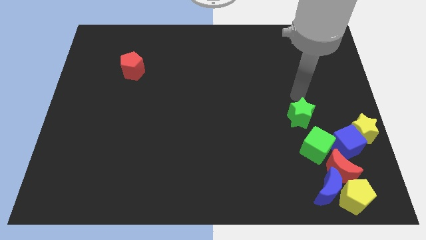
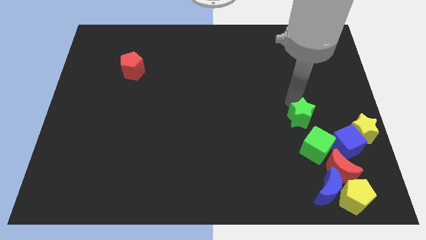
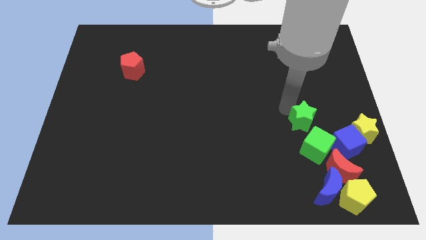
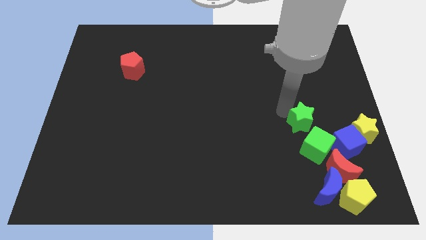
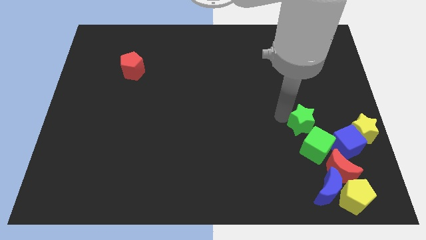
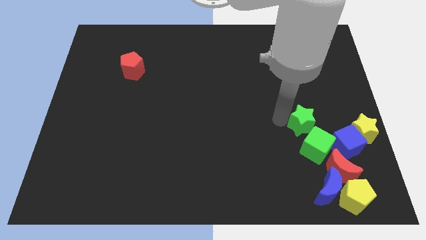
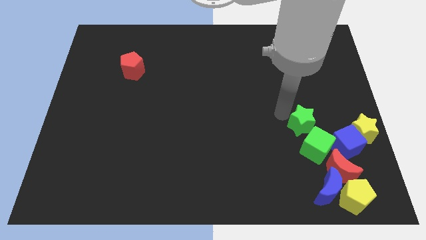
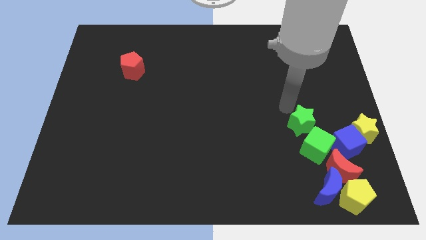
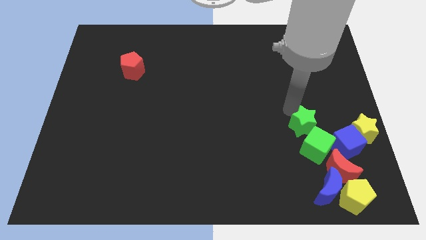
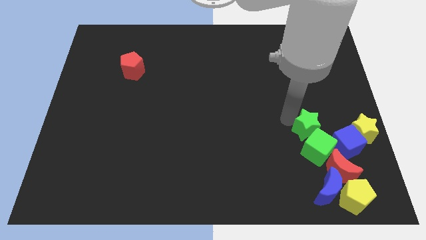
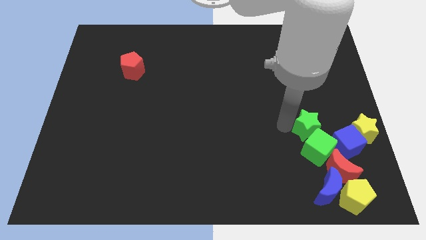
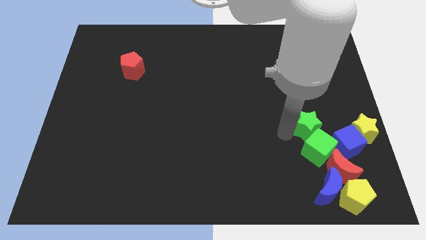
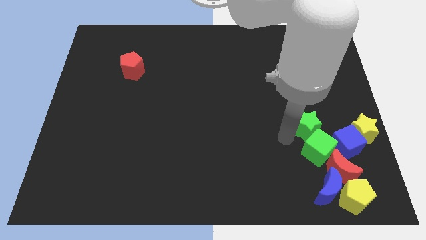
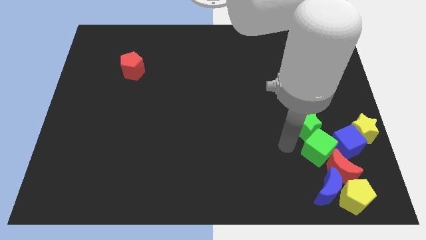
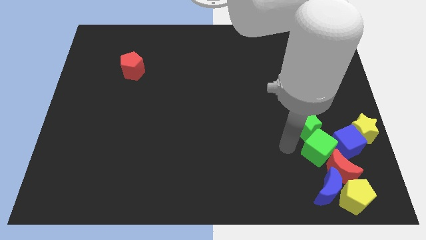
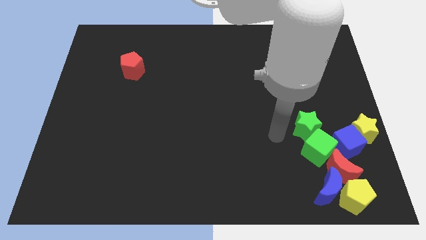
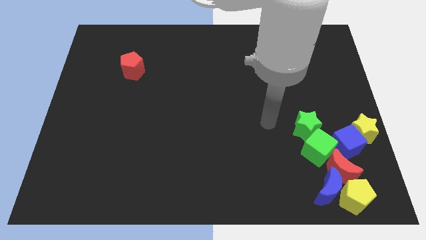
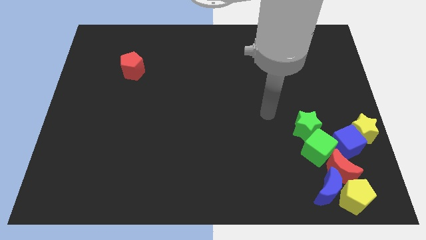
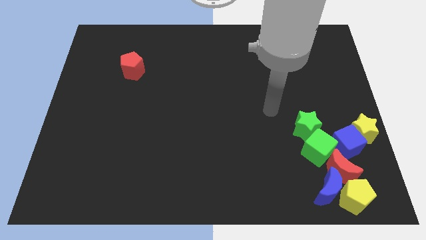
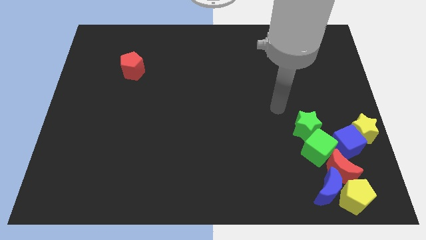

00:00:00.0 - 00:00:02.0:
mmove the green star above the green cube

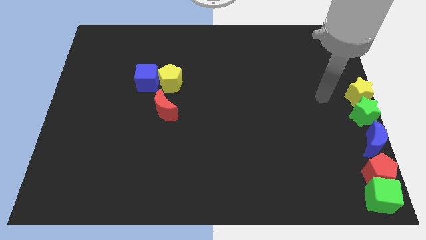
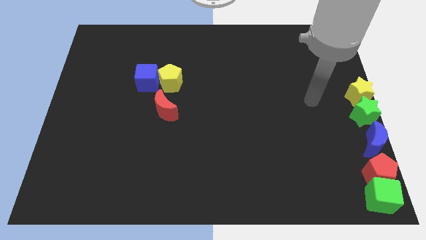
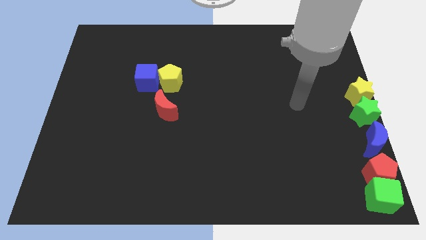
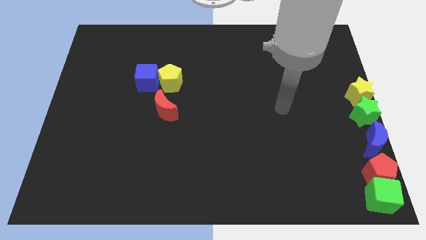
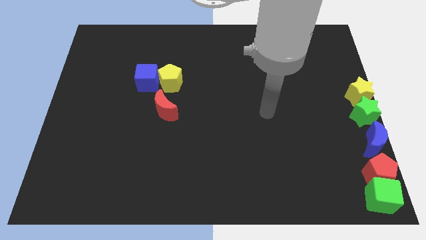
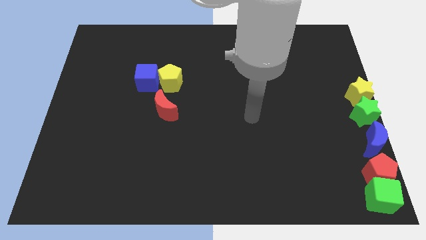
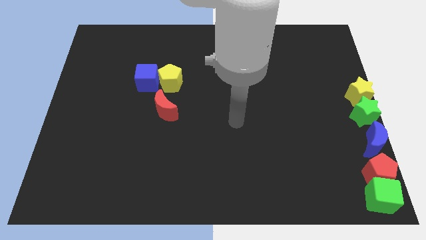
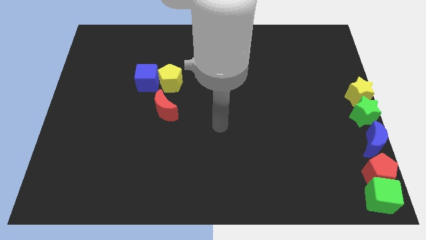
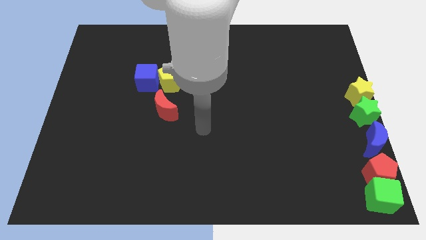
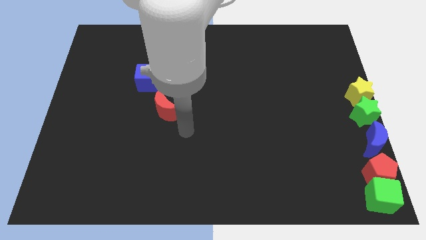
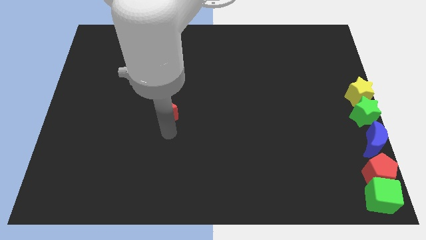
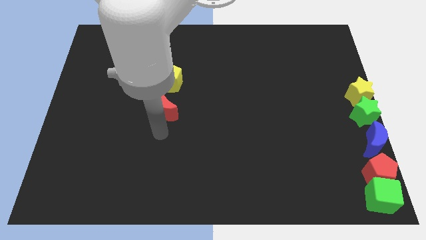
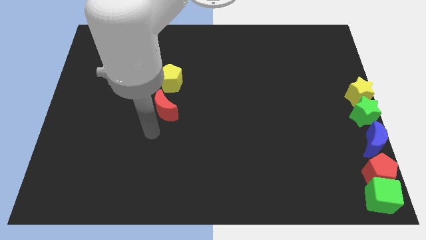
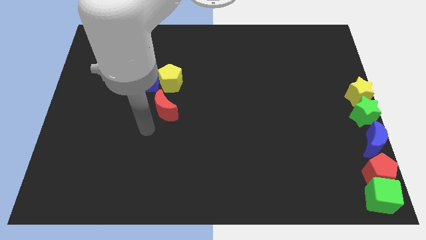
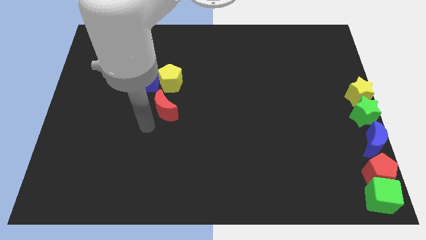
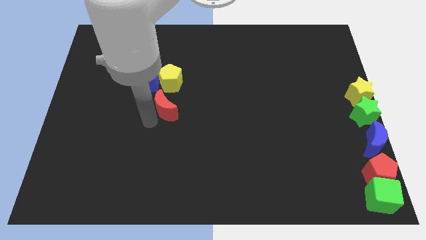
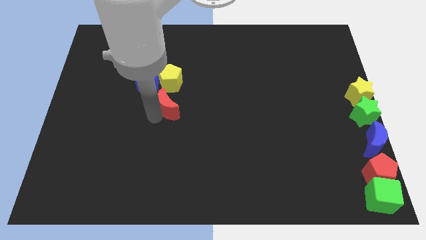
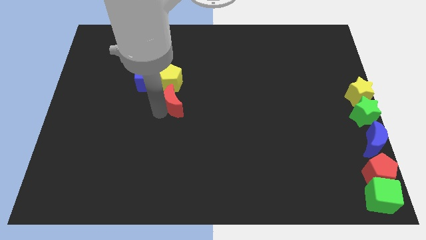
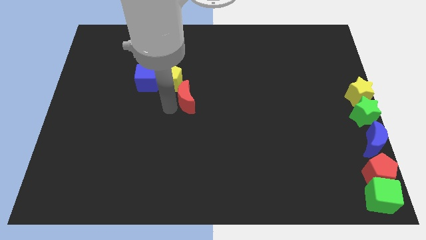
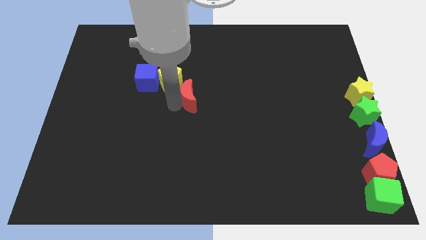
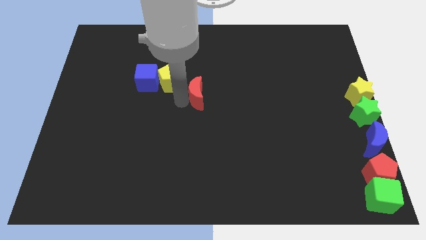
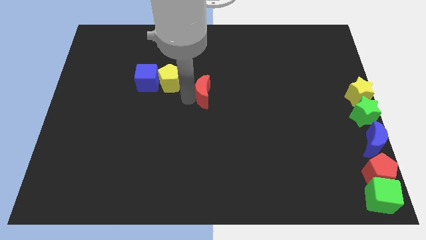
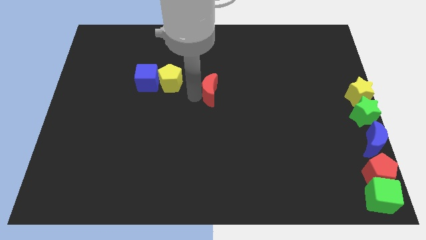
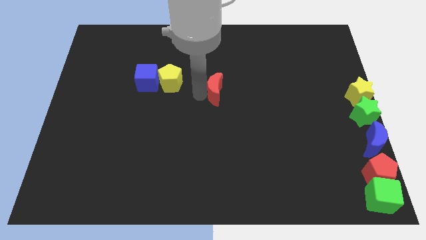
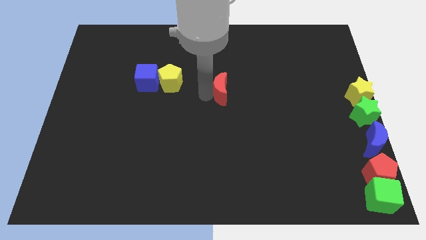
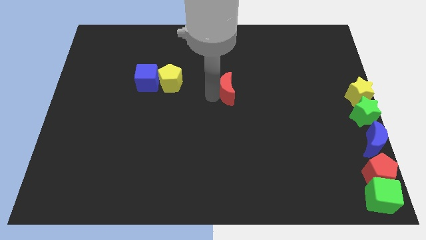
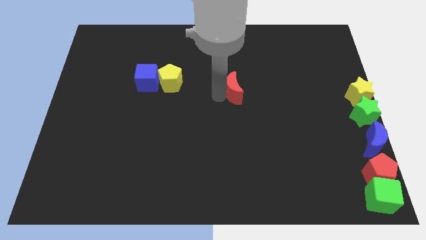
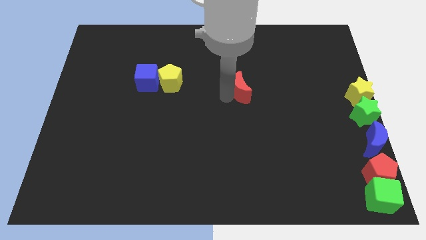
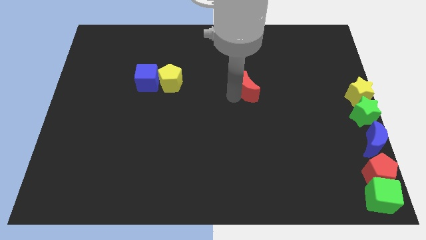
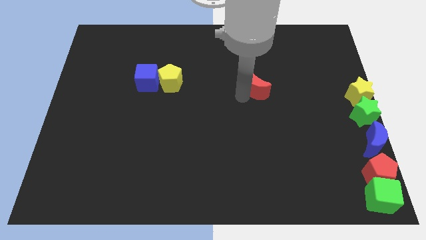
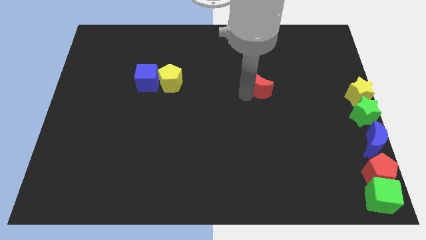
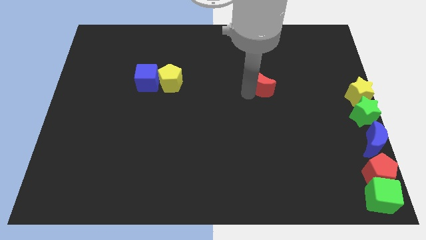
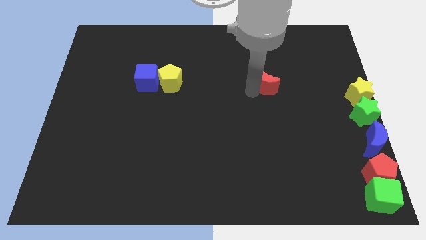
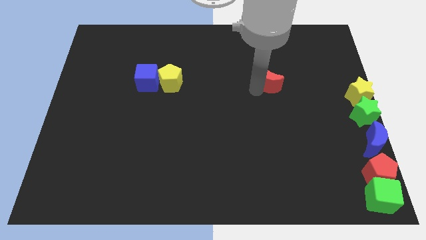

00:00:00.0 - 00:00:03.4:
move red crescent towards the top right corner

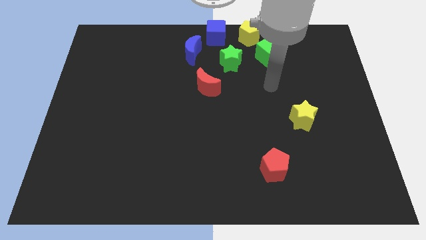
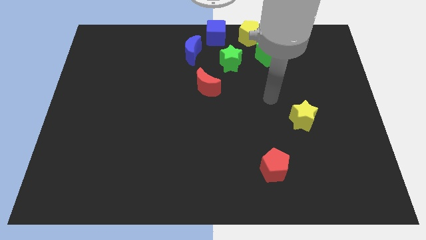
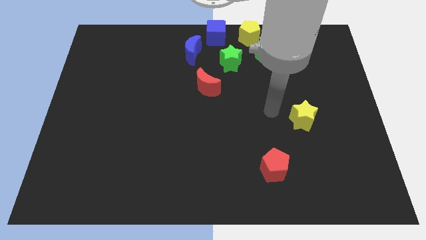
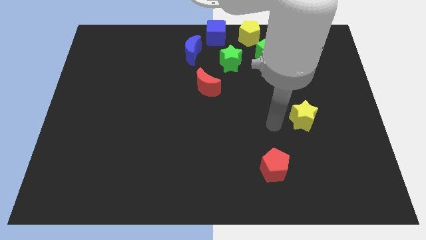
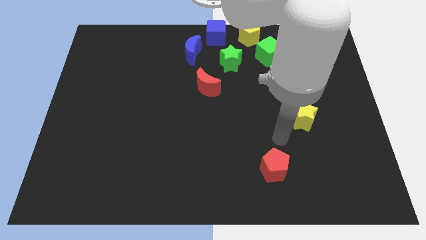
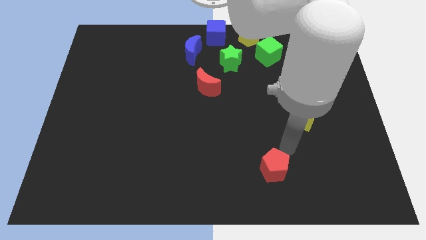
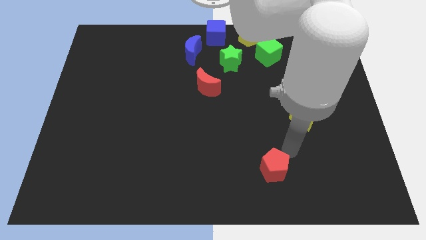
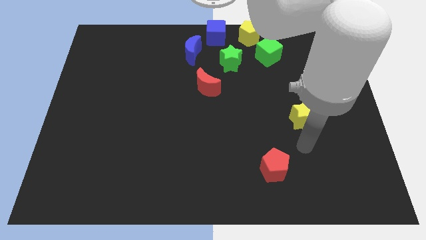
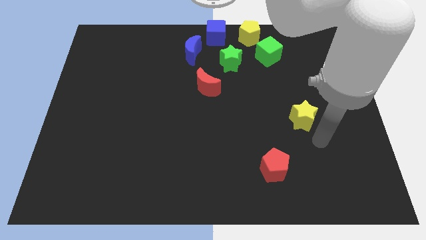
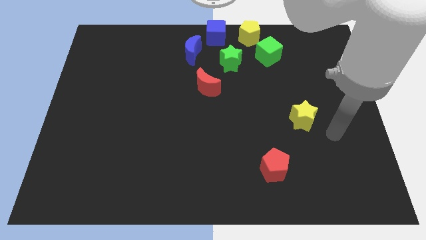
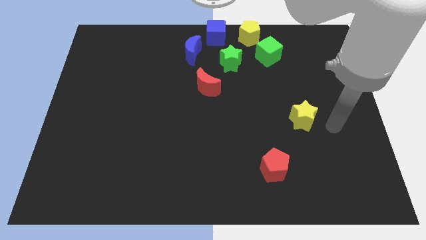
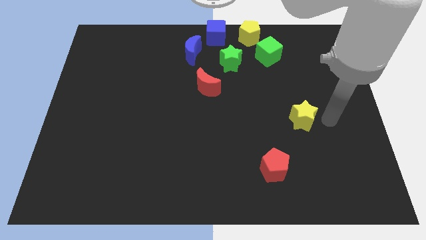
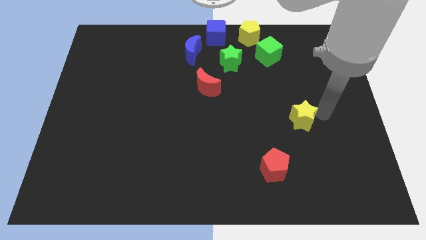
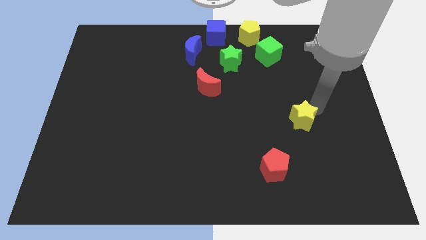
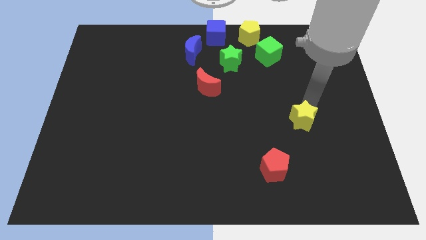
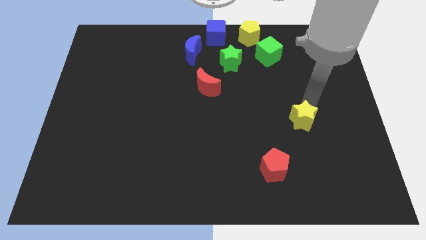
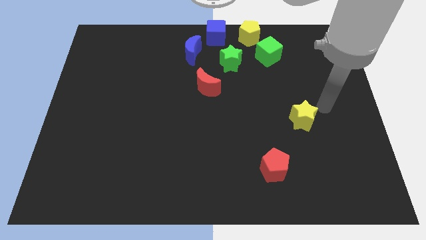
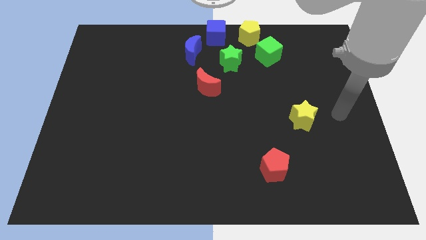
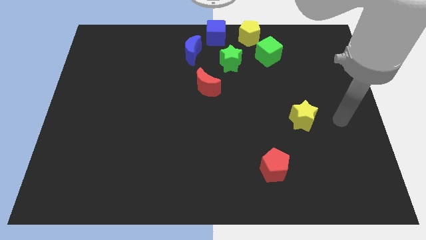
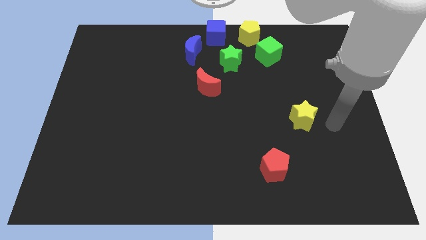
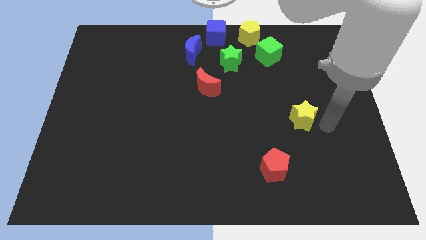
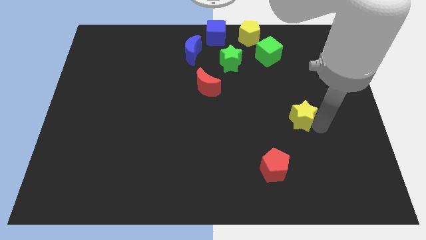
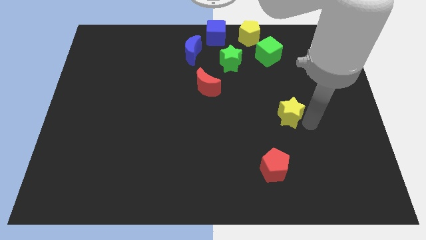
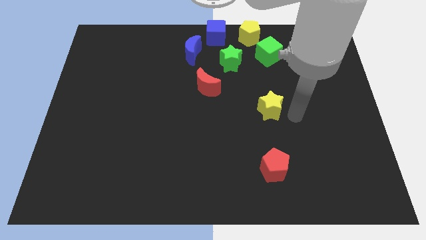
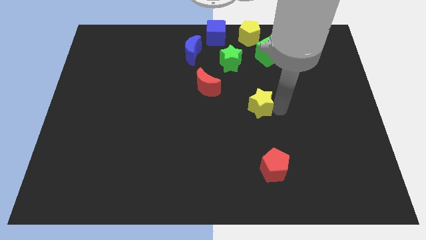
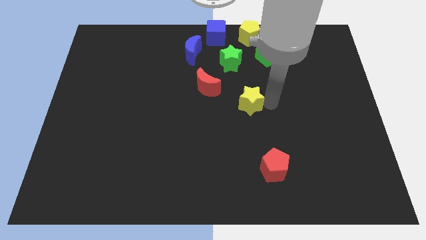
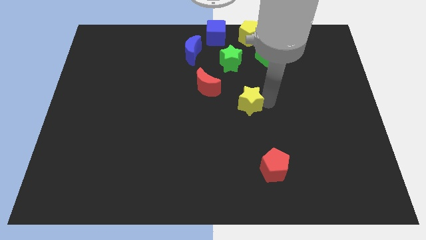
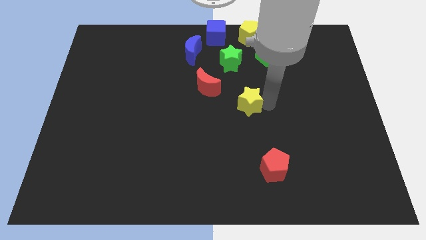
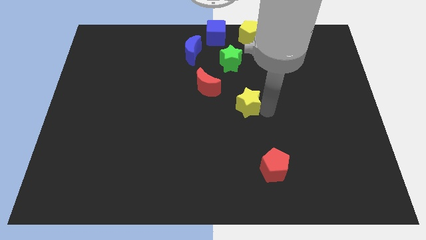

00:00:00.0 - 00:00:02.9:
move the yellow star diagonal to the red crescent

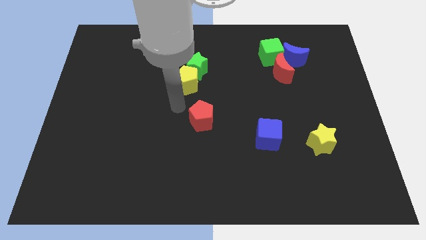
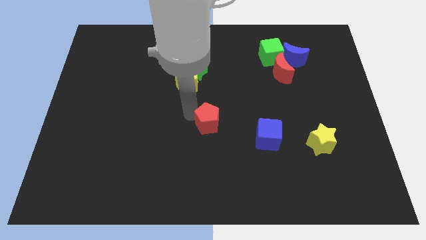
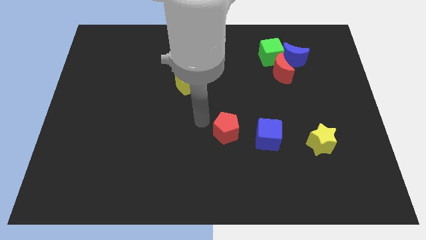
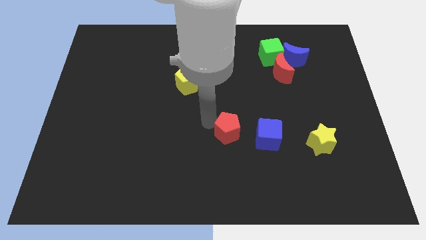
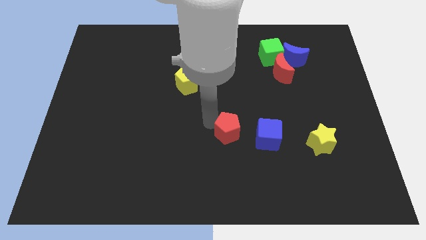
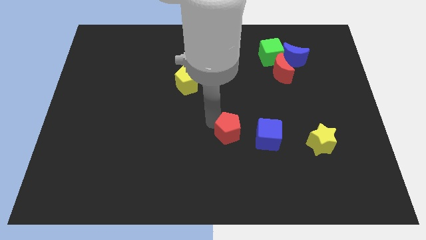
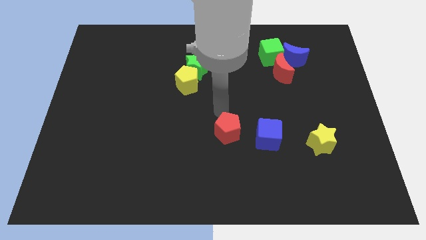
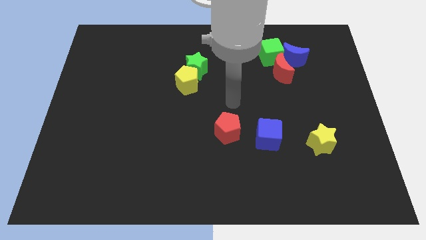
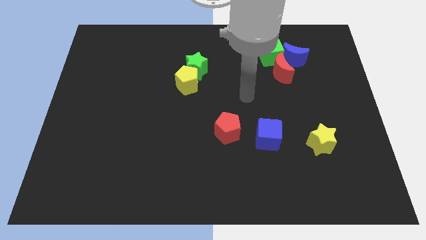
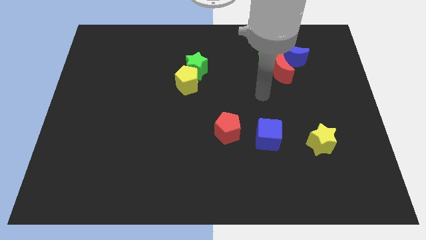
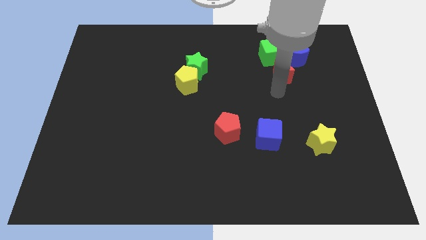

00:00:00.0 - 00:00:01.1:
place red pentagon beside blue cube
